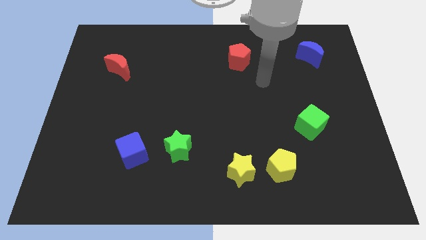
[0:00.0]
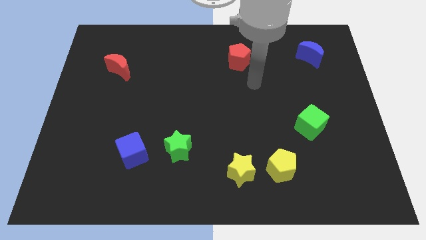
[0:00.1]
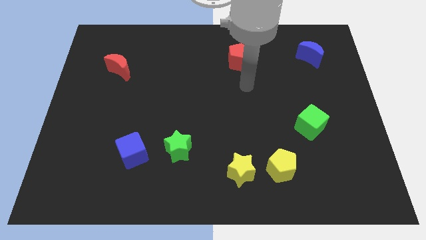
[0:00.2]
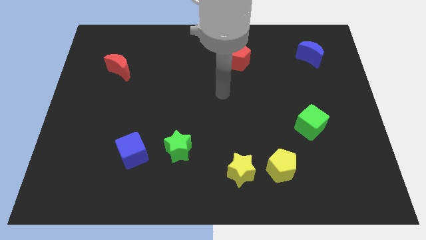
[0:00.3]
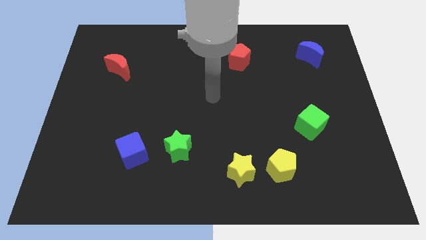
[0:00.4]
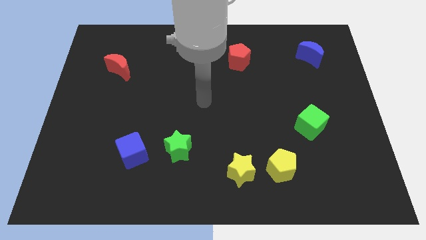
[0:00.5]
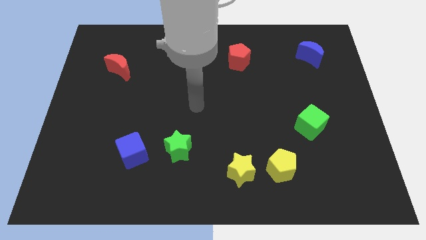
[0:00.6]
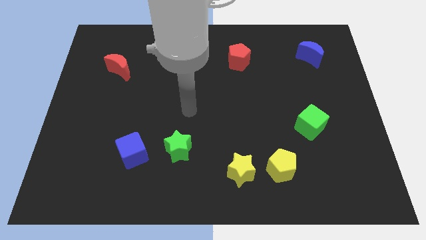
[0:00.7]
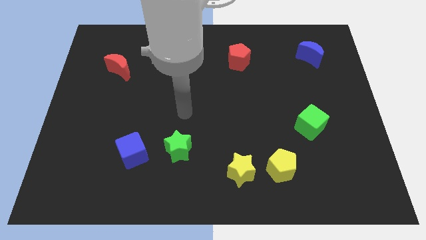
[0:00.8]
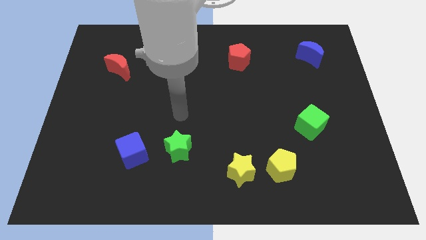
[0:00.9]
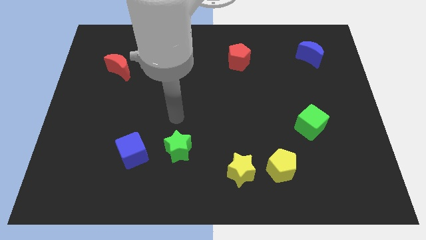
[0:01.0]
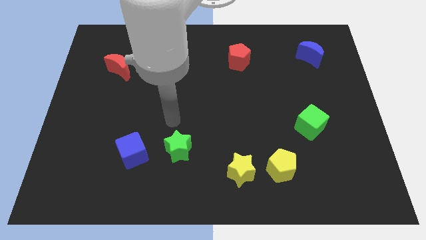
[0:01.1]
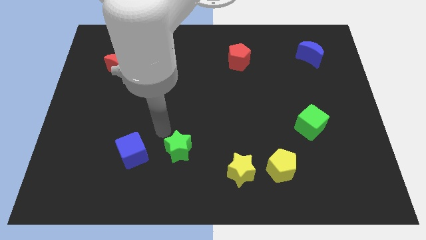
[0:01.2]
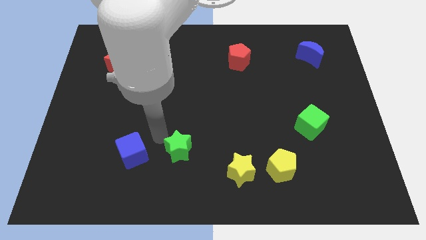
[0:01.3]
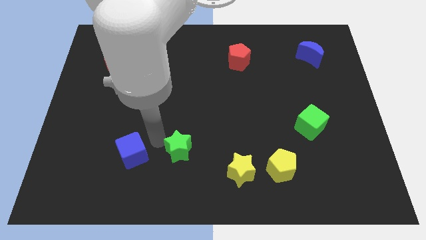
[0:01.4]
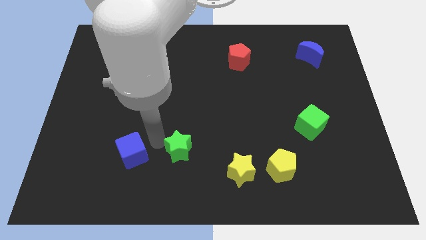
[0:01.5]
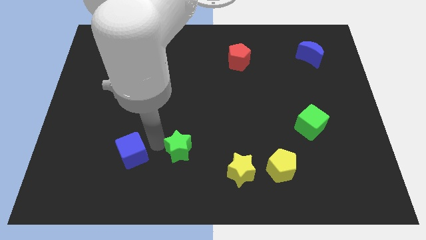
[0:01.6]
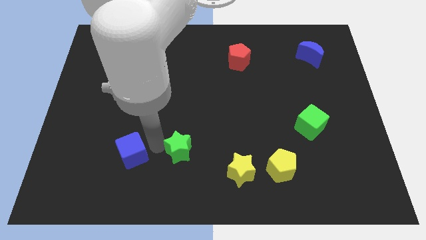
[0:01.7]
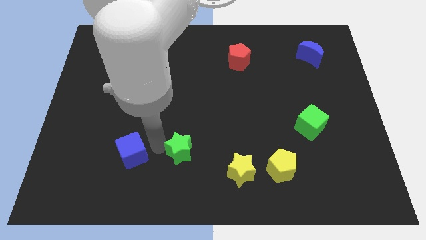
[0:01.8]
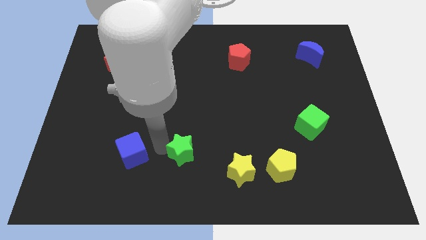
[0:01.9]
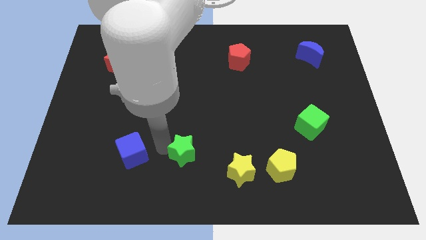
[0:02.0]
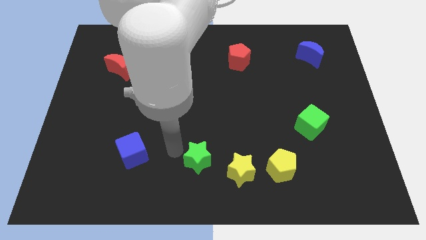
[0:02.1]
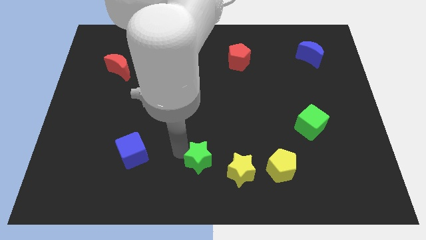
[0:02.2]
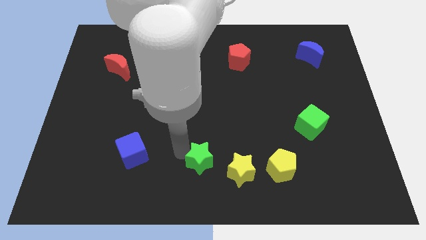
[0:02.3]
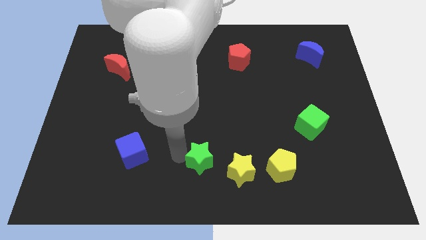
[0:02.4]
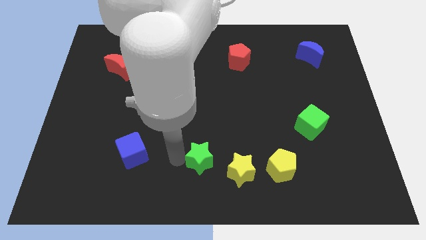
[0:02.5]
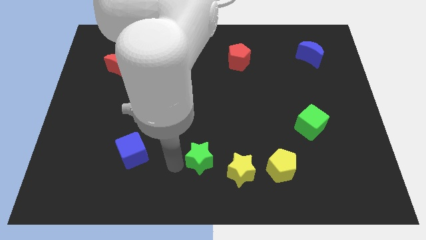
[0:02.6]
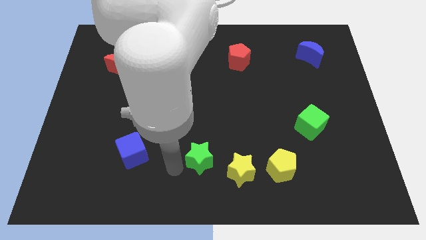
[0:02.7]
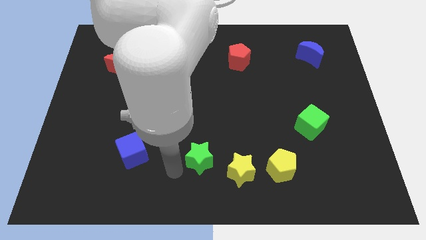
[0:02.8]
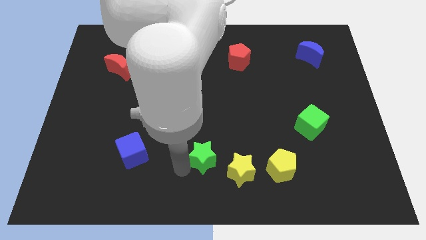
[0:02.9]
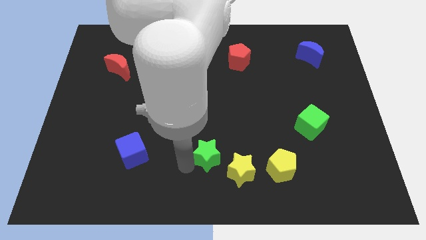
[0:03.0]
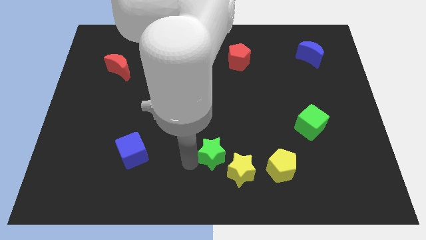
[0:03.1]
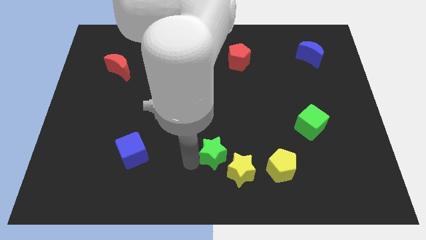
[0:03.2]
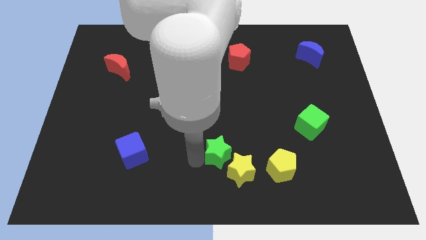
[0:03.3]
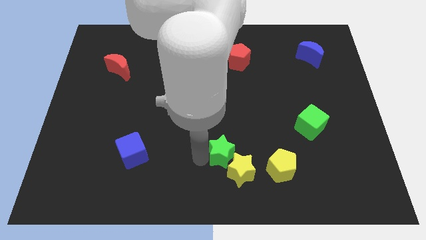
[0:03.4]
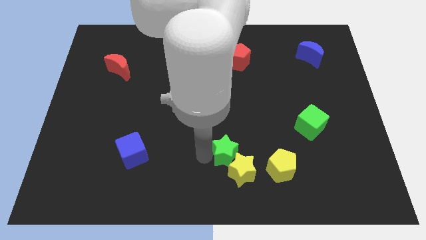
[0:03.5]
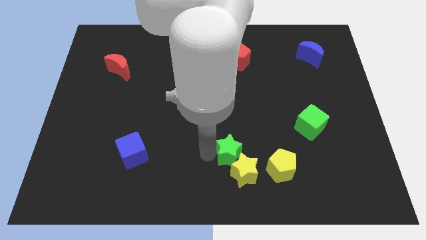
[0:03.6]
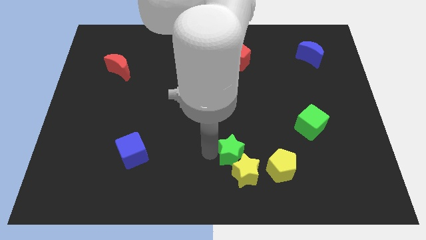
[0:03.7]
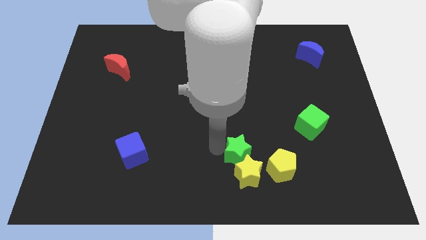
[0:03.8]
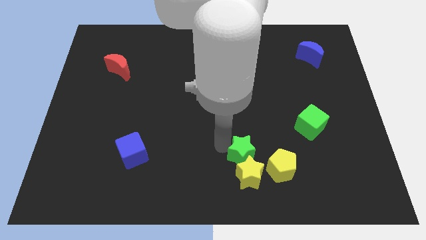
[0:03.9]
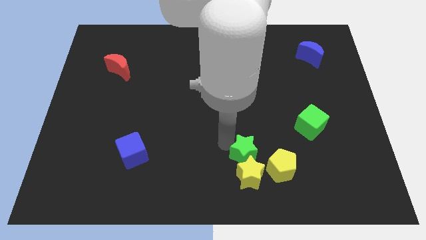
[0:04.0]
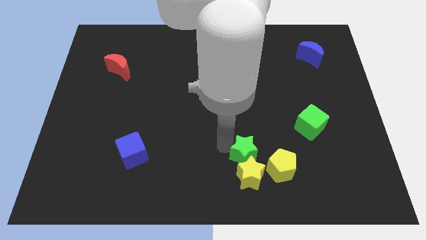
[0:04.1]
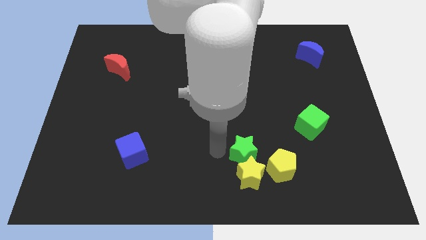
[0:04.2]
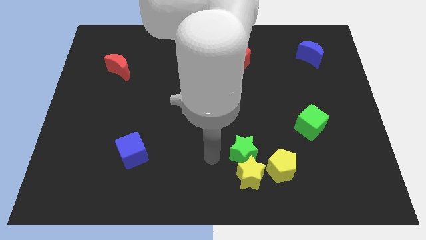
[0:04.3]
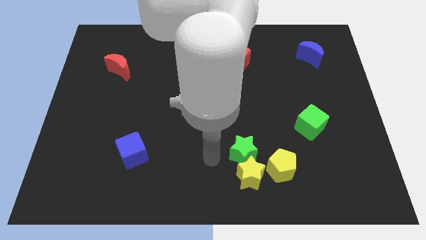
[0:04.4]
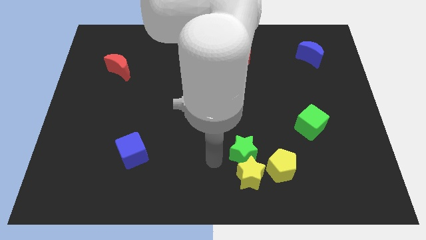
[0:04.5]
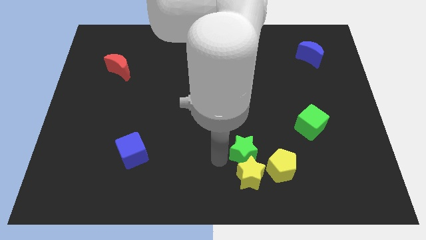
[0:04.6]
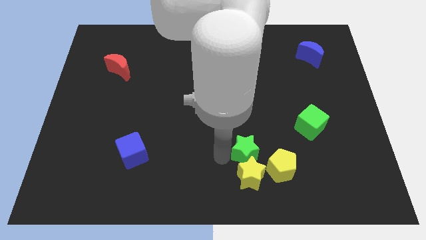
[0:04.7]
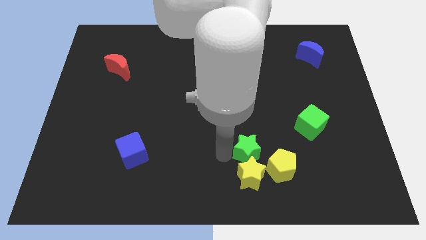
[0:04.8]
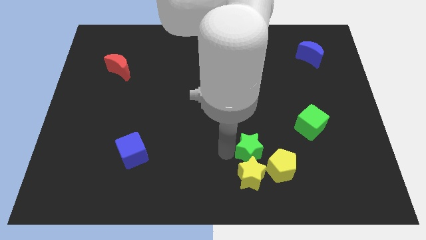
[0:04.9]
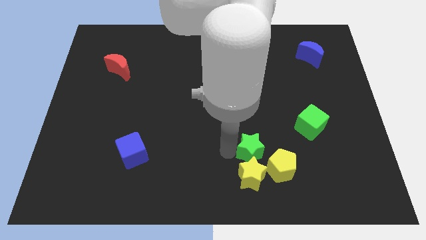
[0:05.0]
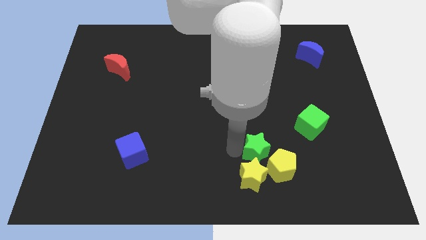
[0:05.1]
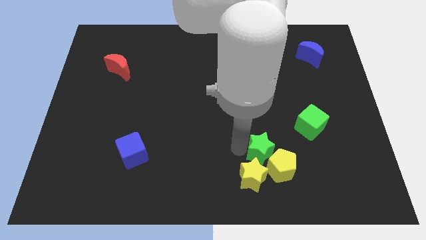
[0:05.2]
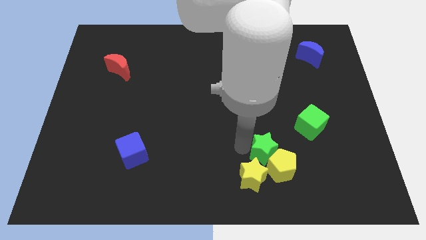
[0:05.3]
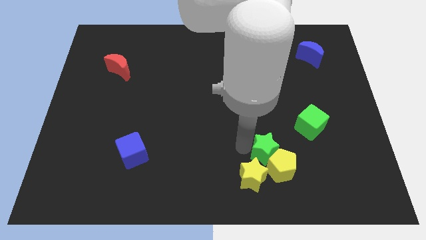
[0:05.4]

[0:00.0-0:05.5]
slide the green star close to the yellow pentagon

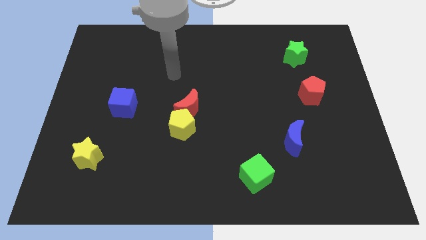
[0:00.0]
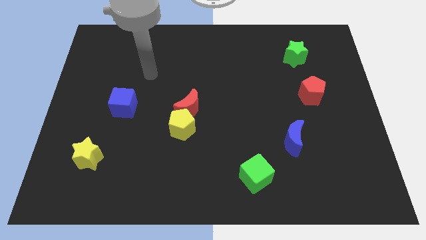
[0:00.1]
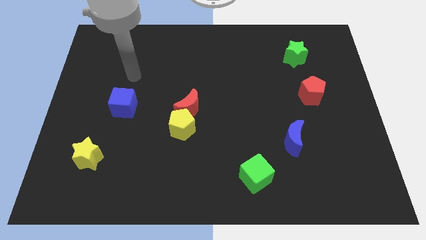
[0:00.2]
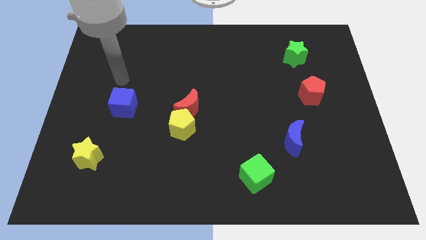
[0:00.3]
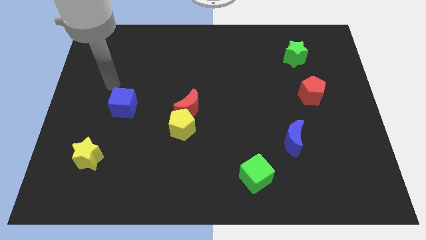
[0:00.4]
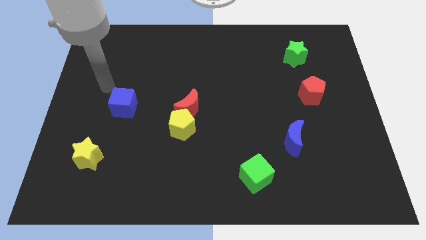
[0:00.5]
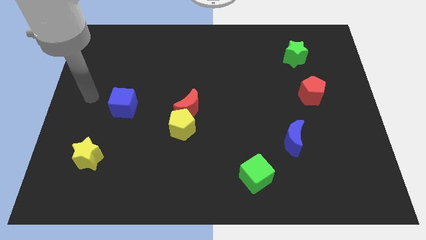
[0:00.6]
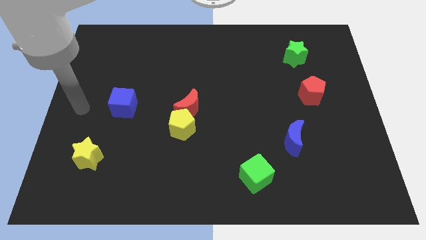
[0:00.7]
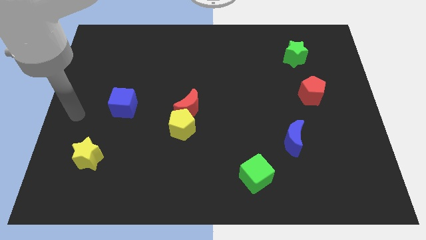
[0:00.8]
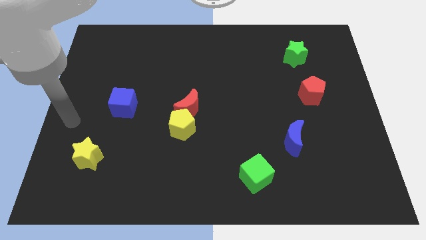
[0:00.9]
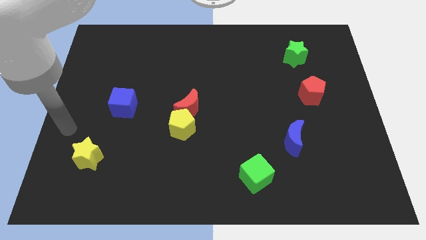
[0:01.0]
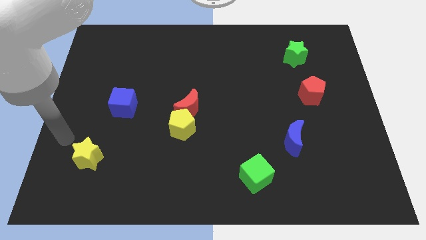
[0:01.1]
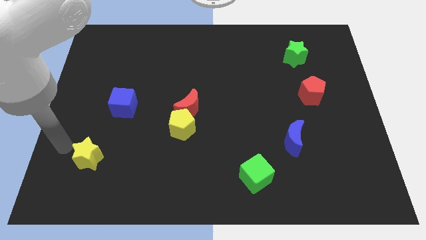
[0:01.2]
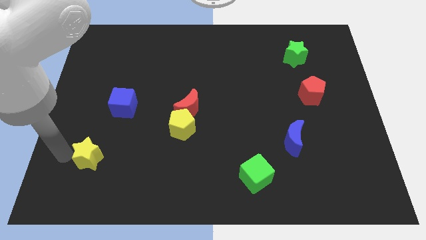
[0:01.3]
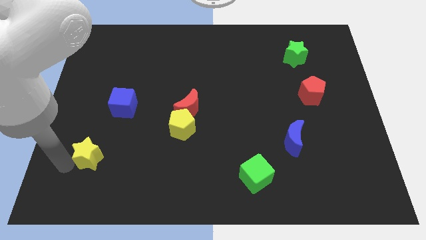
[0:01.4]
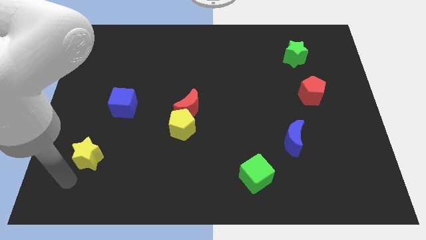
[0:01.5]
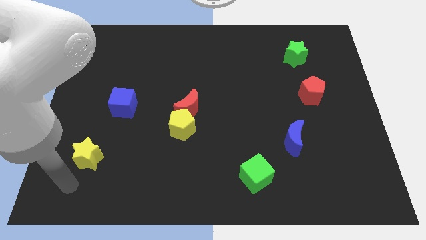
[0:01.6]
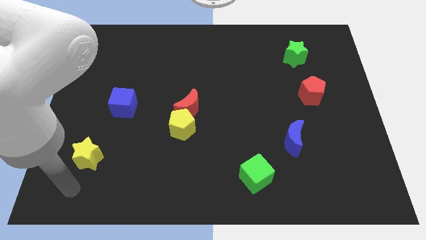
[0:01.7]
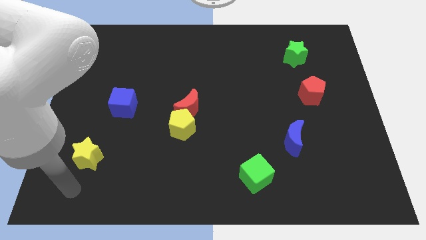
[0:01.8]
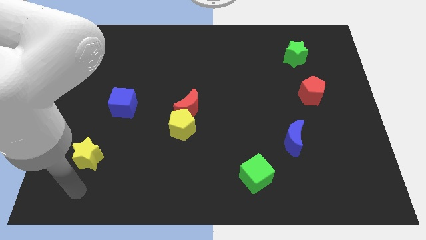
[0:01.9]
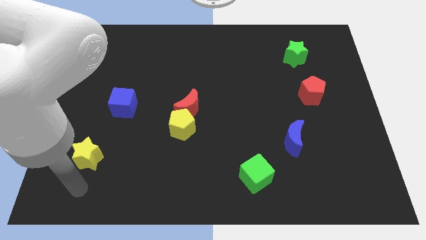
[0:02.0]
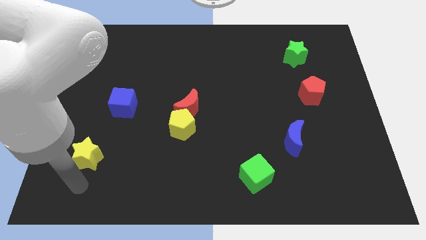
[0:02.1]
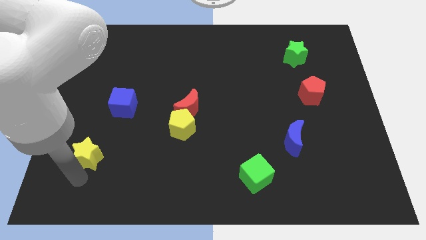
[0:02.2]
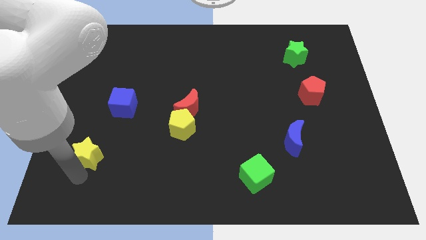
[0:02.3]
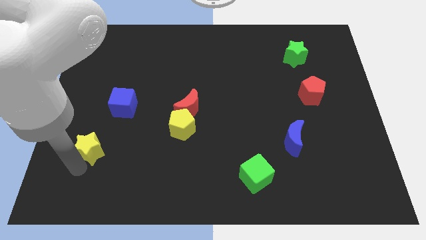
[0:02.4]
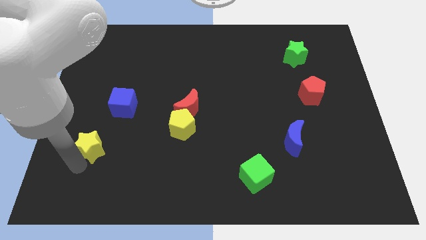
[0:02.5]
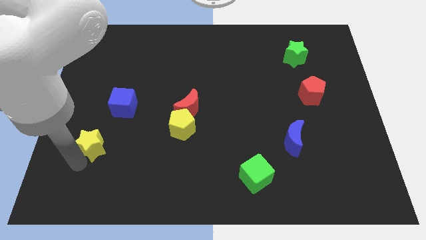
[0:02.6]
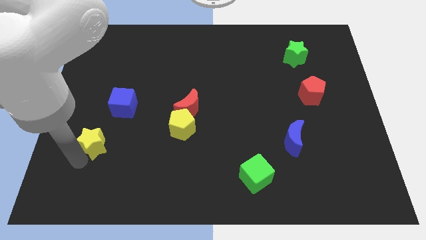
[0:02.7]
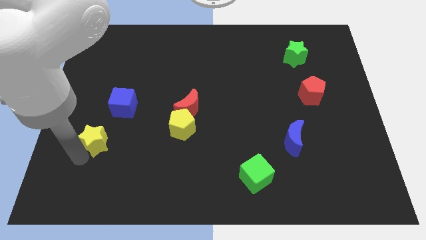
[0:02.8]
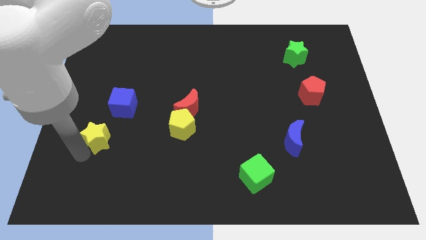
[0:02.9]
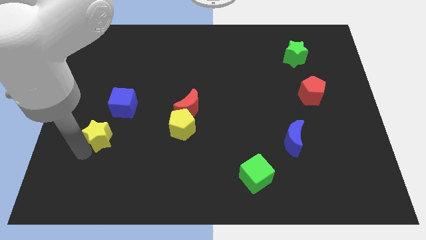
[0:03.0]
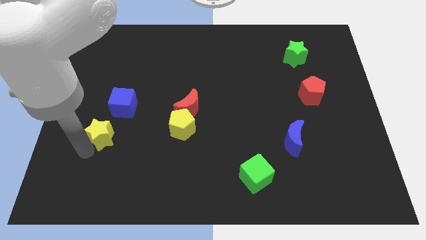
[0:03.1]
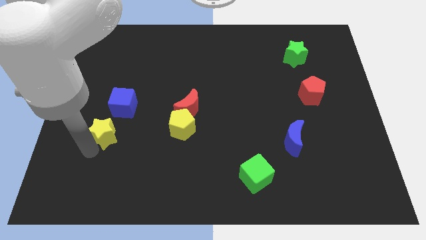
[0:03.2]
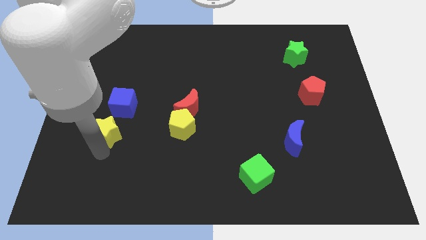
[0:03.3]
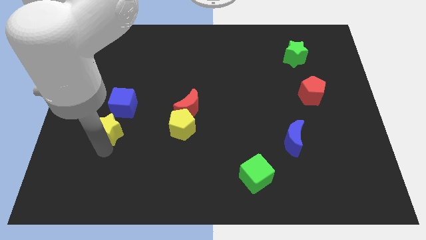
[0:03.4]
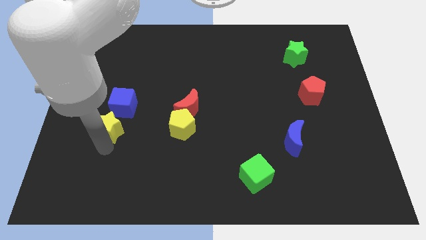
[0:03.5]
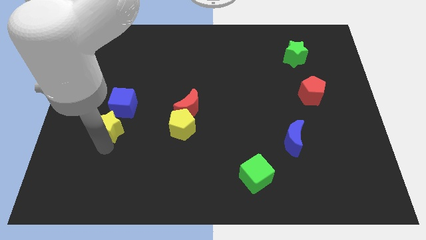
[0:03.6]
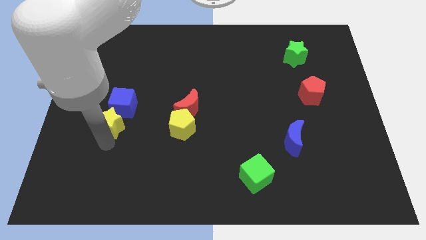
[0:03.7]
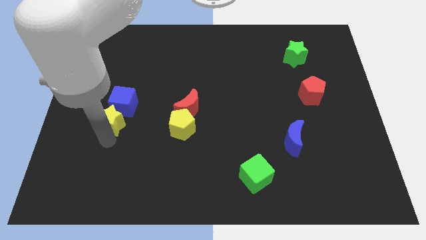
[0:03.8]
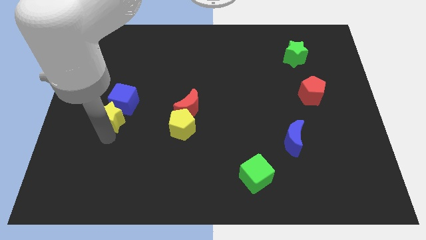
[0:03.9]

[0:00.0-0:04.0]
push the yellow star to the blue cube
